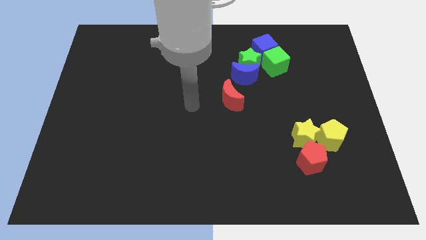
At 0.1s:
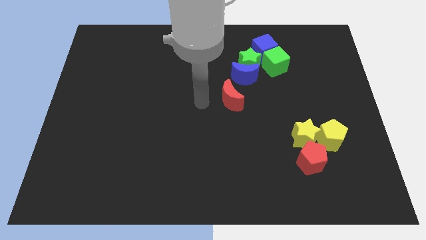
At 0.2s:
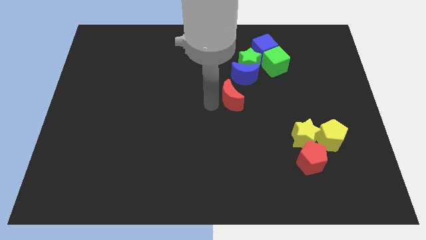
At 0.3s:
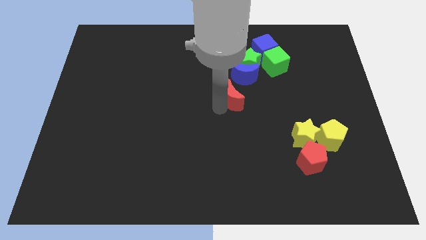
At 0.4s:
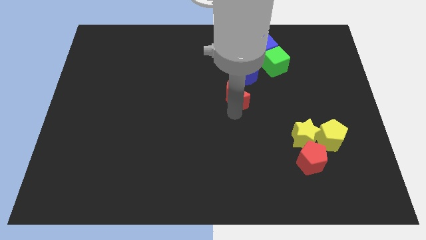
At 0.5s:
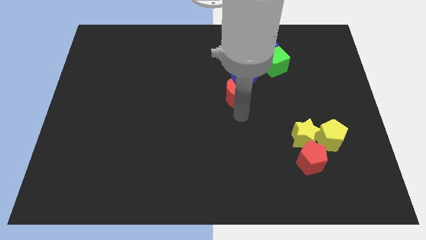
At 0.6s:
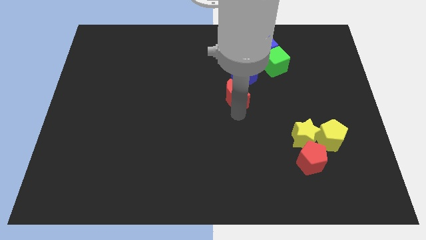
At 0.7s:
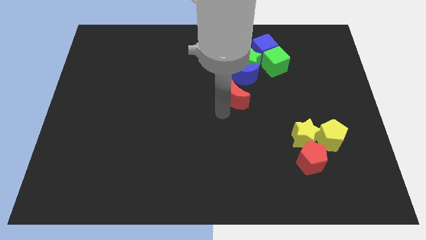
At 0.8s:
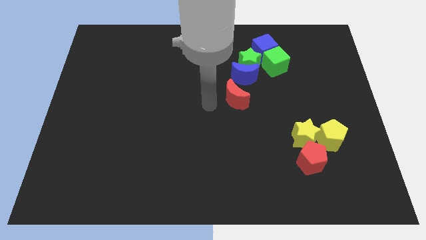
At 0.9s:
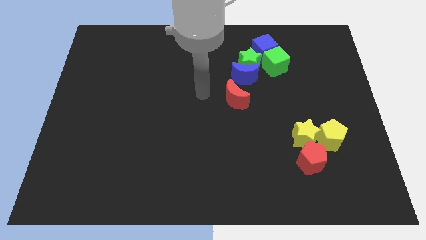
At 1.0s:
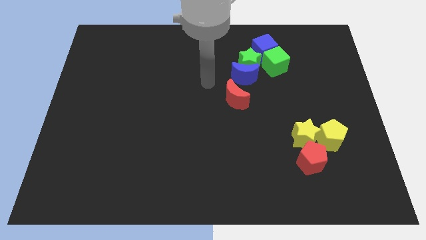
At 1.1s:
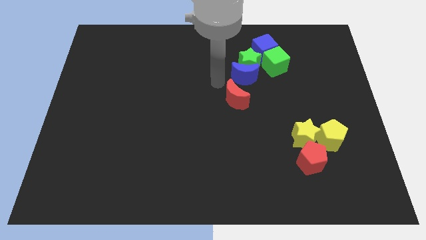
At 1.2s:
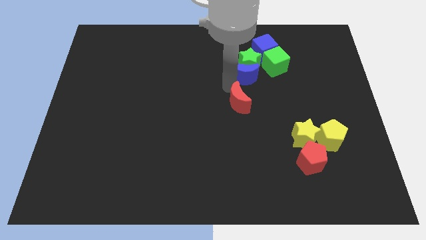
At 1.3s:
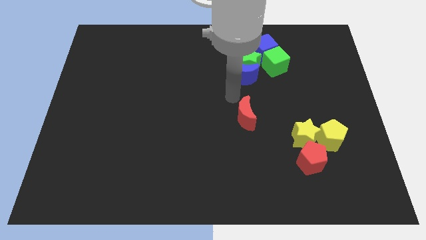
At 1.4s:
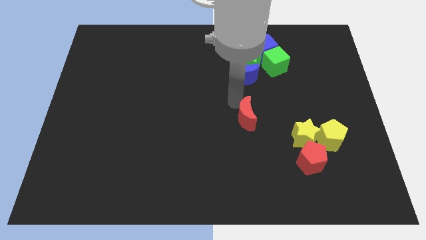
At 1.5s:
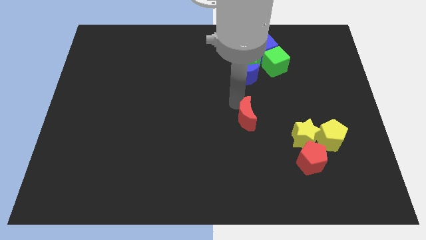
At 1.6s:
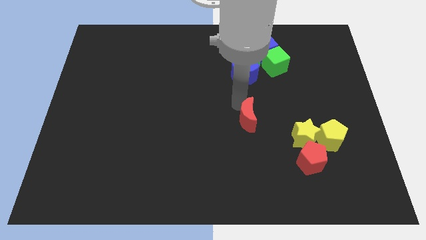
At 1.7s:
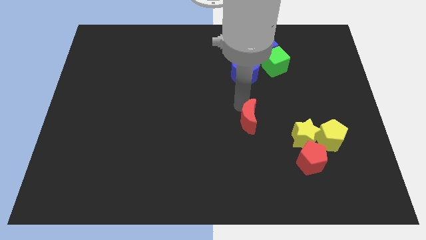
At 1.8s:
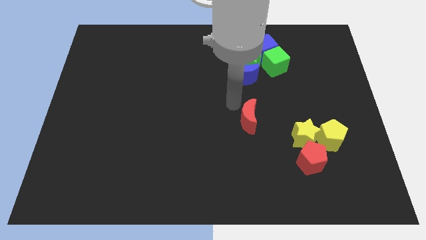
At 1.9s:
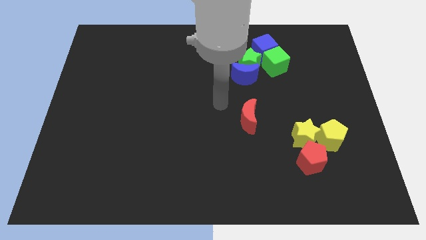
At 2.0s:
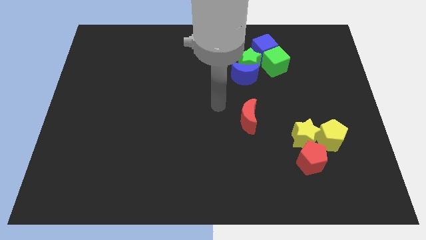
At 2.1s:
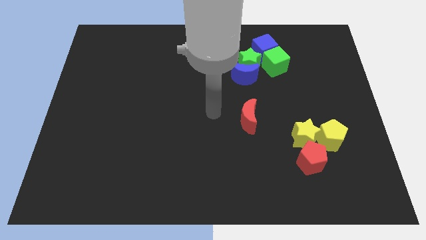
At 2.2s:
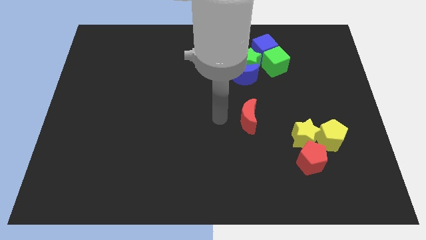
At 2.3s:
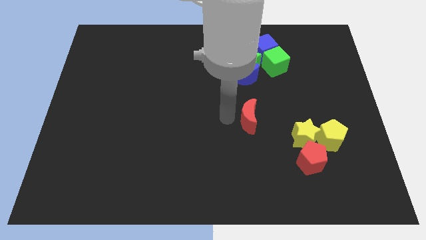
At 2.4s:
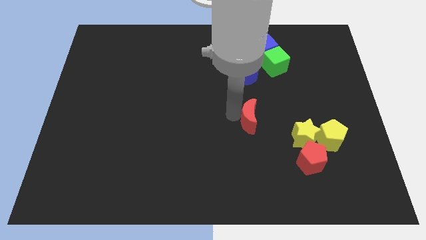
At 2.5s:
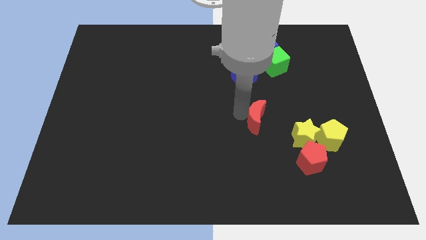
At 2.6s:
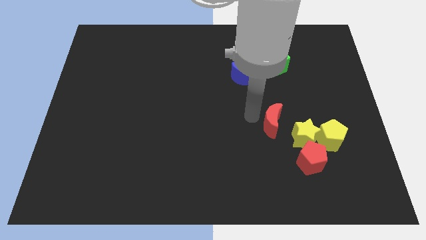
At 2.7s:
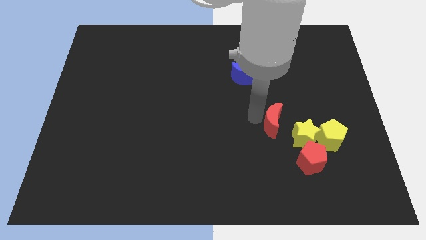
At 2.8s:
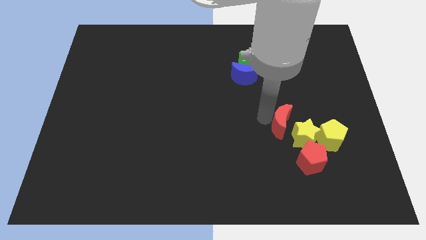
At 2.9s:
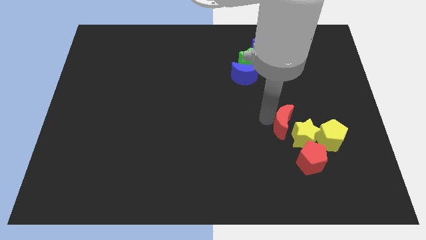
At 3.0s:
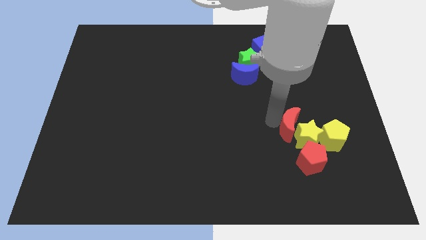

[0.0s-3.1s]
push the red crescent into the yellow star and yellow pentagon

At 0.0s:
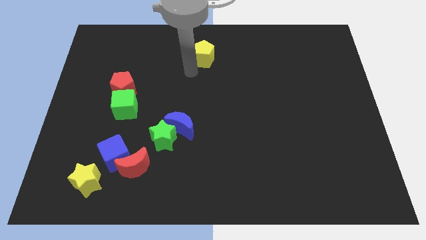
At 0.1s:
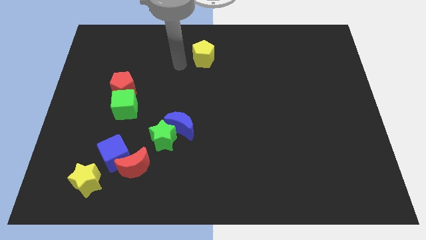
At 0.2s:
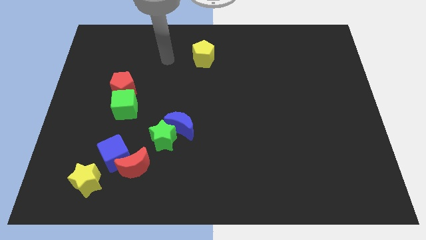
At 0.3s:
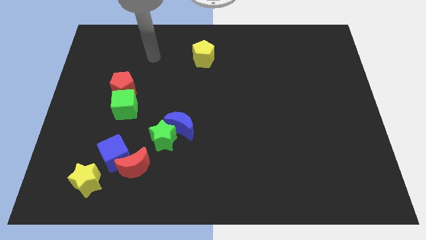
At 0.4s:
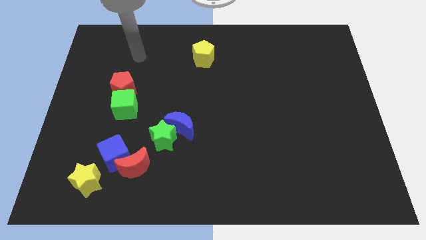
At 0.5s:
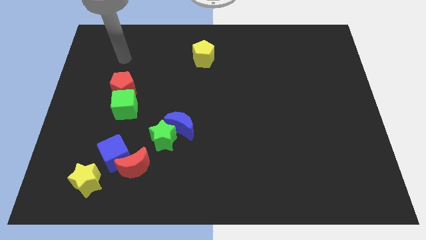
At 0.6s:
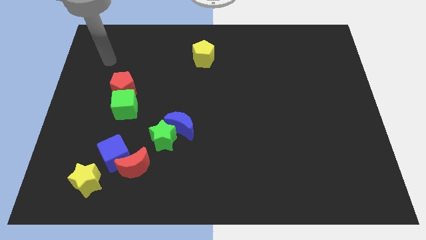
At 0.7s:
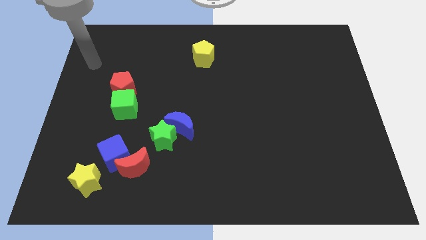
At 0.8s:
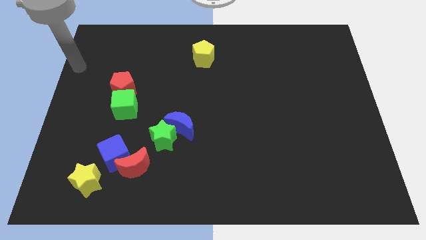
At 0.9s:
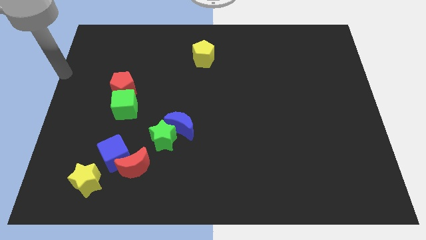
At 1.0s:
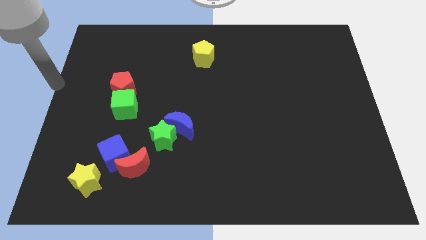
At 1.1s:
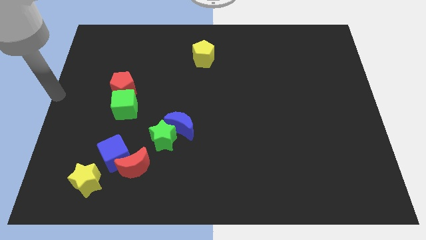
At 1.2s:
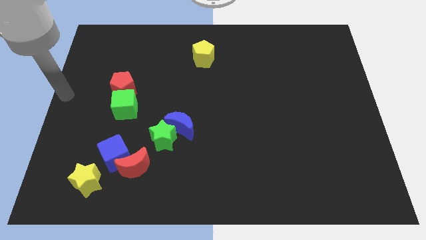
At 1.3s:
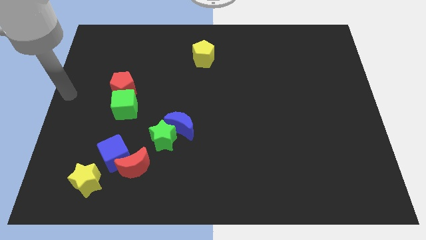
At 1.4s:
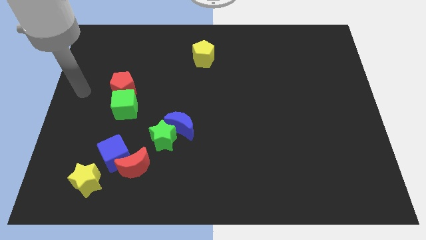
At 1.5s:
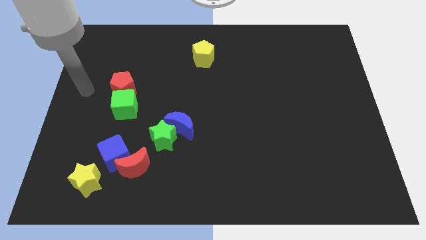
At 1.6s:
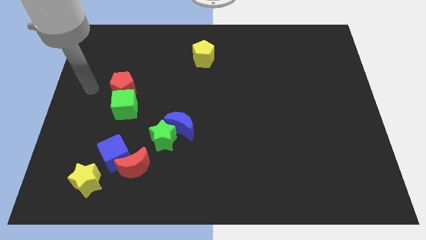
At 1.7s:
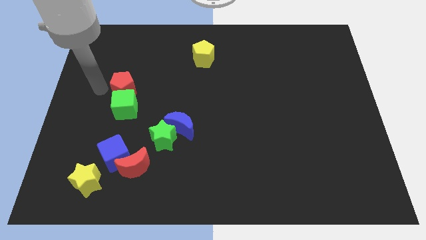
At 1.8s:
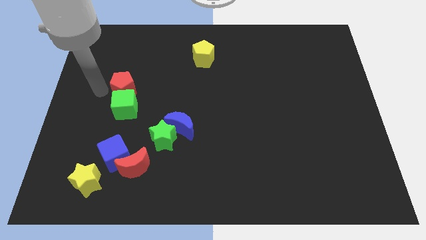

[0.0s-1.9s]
point your arm to the left of red pentagon

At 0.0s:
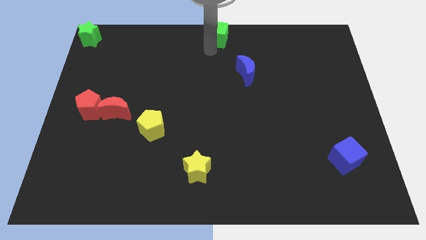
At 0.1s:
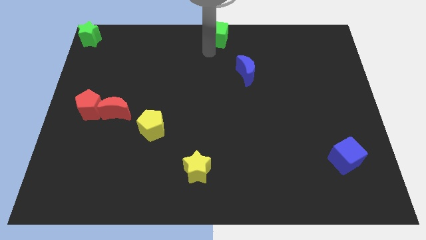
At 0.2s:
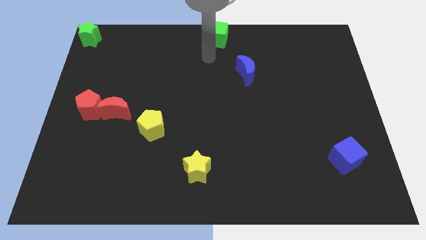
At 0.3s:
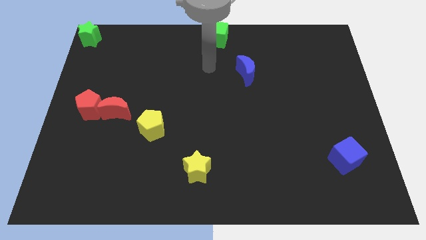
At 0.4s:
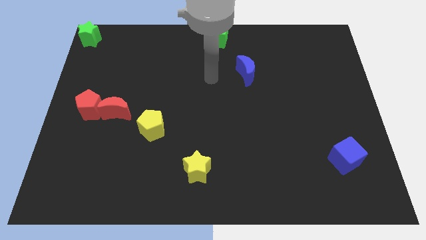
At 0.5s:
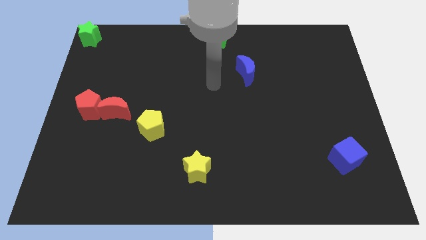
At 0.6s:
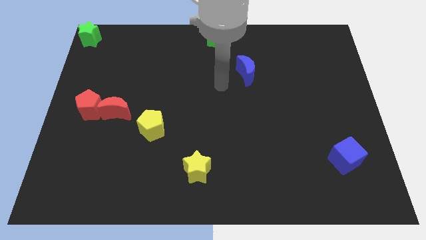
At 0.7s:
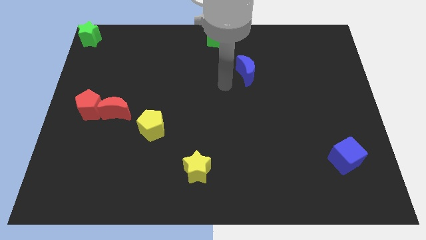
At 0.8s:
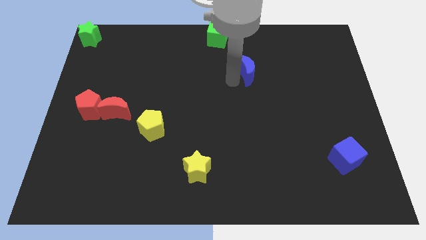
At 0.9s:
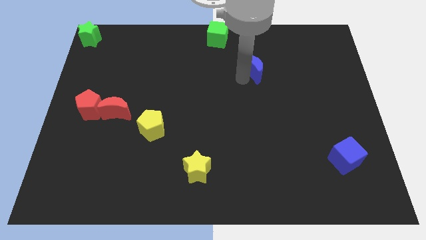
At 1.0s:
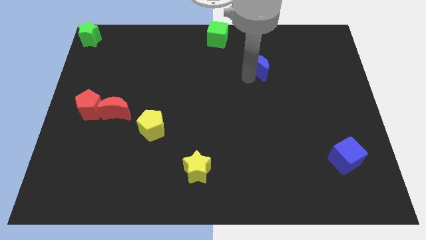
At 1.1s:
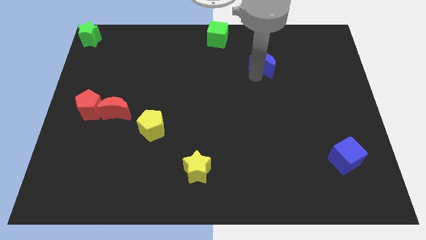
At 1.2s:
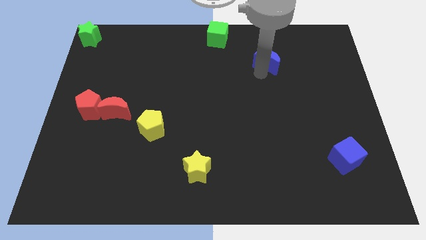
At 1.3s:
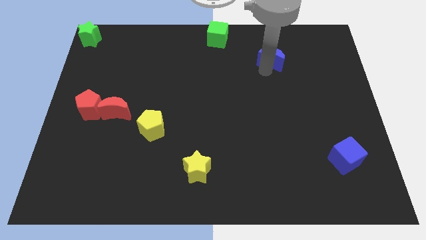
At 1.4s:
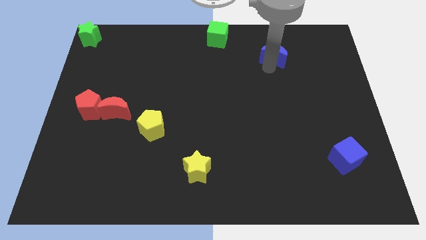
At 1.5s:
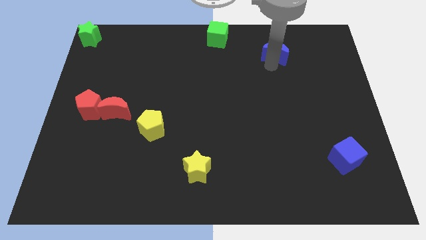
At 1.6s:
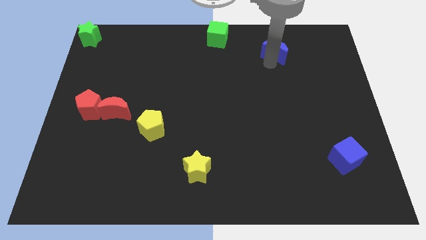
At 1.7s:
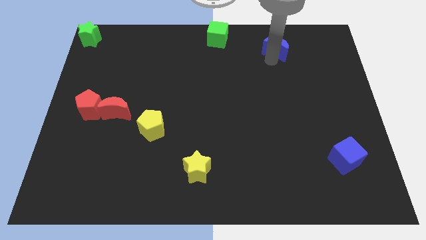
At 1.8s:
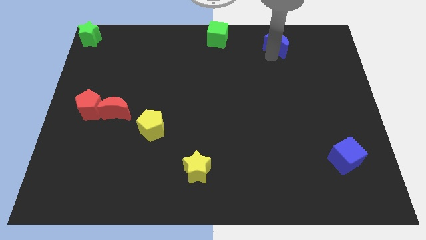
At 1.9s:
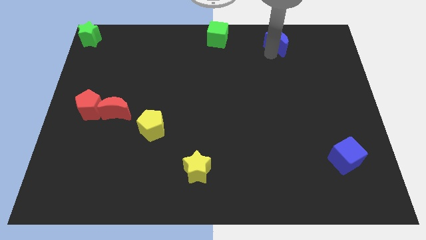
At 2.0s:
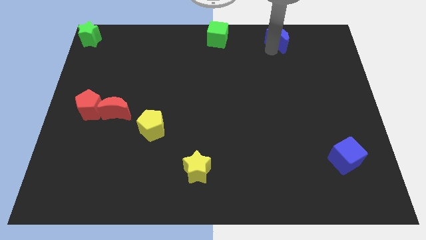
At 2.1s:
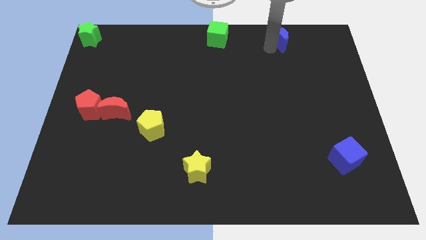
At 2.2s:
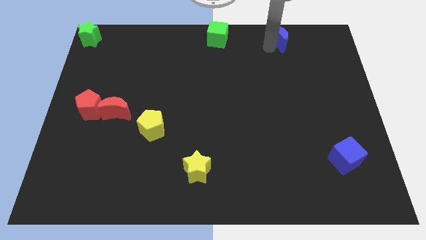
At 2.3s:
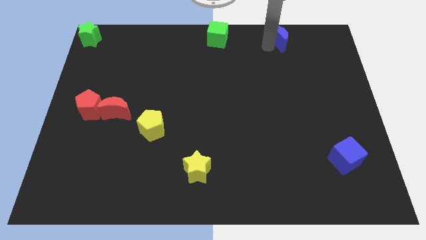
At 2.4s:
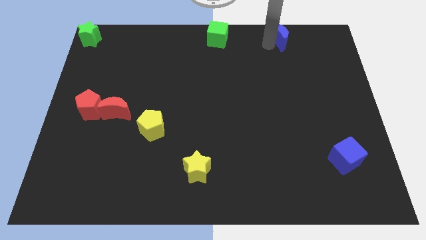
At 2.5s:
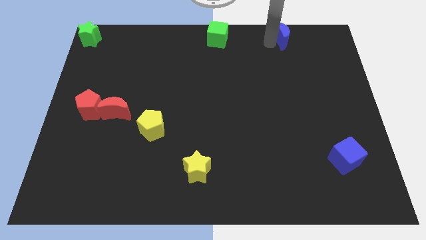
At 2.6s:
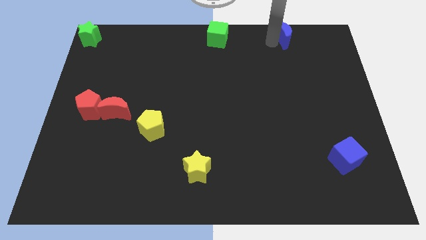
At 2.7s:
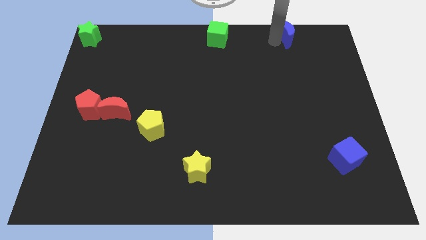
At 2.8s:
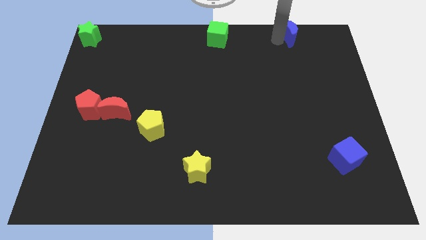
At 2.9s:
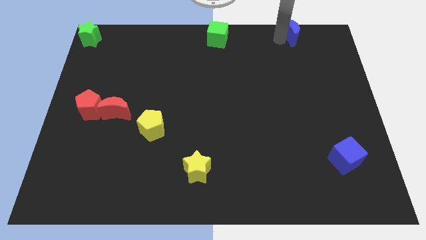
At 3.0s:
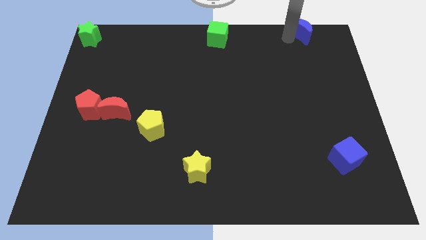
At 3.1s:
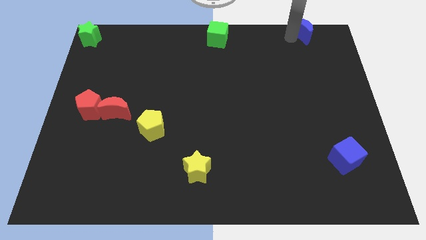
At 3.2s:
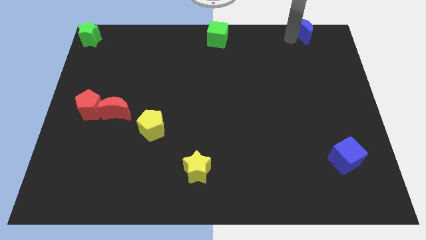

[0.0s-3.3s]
place the blue moon right to the green cube

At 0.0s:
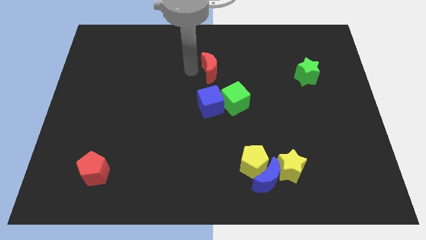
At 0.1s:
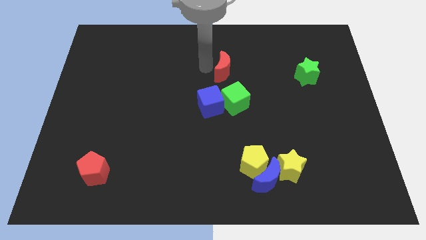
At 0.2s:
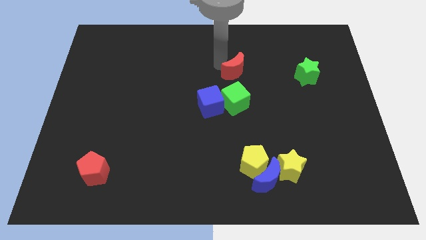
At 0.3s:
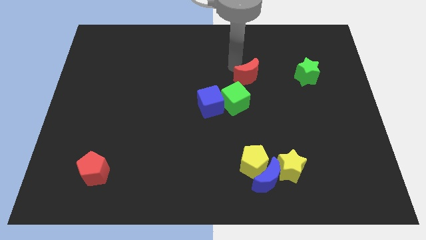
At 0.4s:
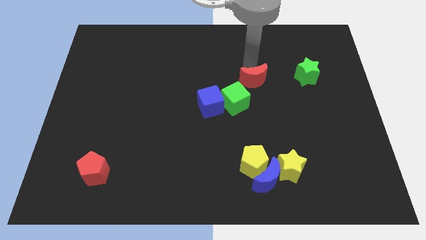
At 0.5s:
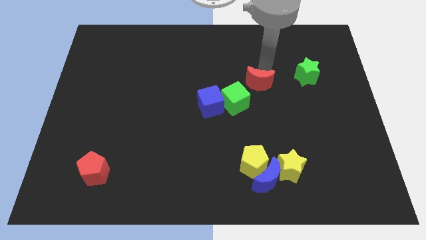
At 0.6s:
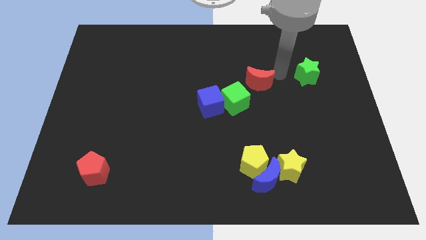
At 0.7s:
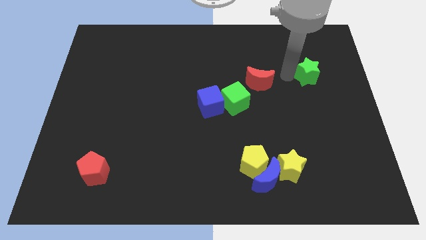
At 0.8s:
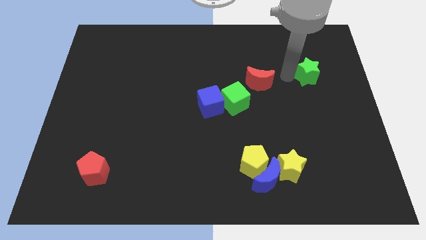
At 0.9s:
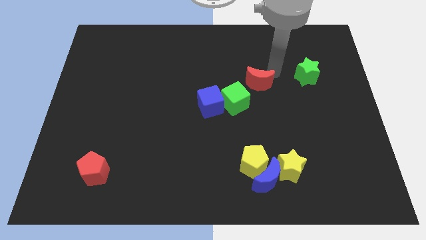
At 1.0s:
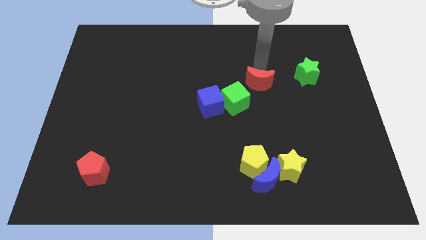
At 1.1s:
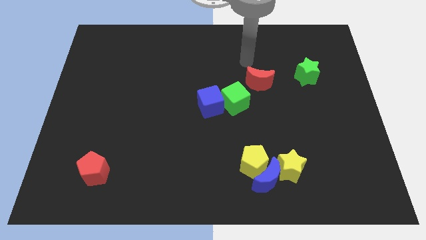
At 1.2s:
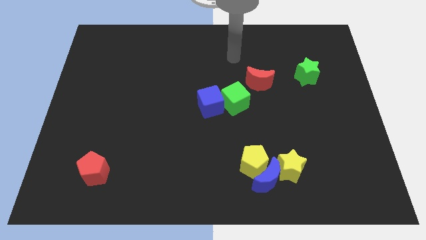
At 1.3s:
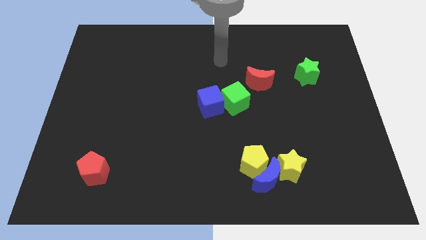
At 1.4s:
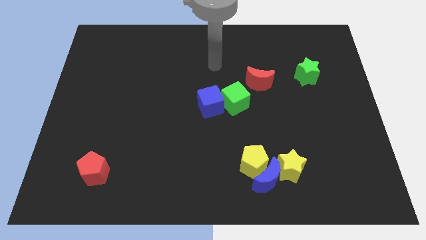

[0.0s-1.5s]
slide the red crescent diagonally top right to the green cube
